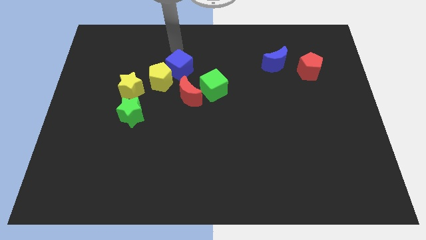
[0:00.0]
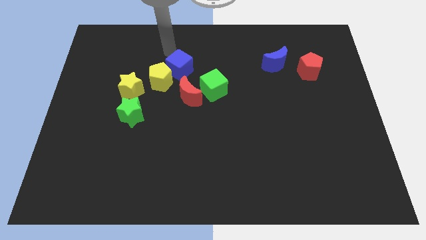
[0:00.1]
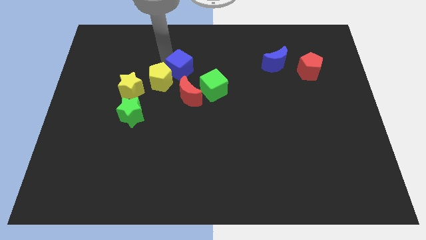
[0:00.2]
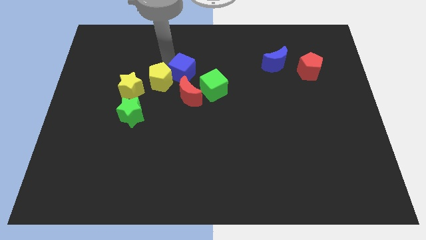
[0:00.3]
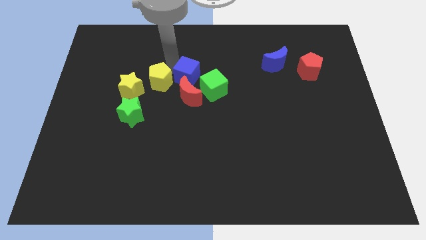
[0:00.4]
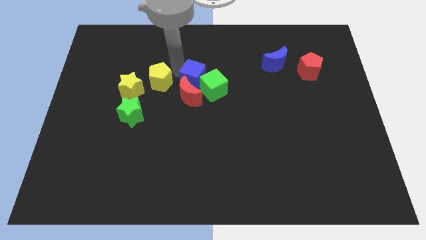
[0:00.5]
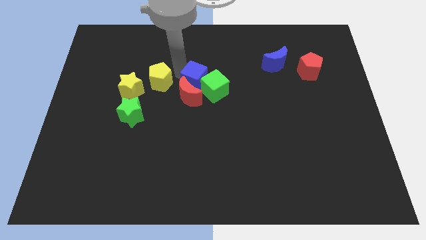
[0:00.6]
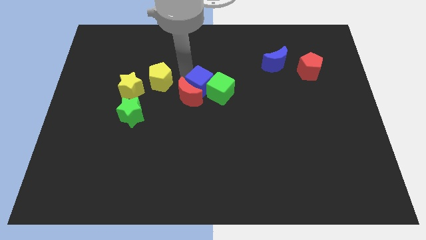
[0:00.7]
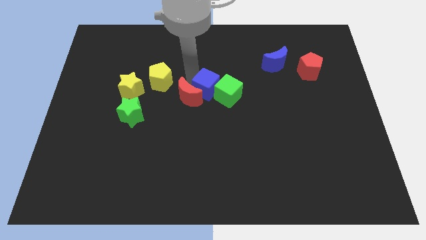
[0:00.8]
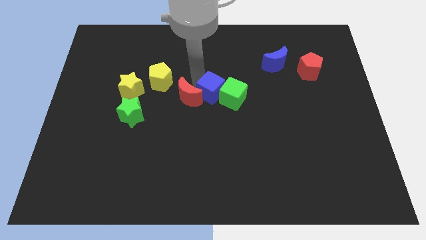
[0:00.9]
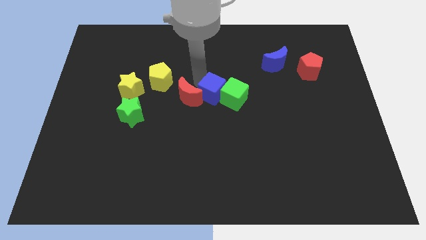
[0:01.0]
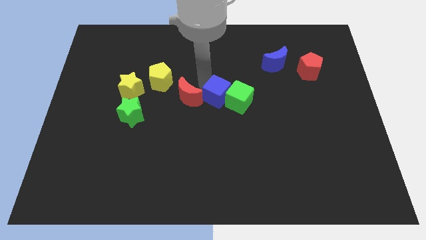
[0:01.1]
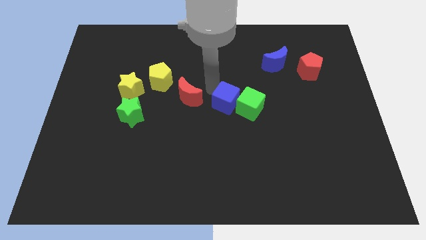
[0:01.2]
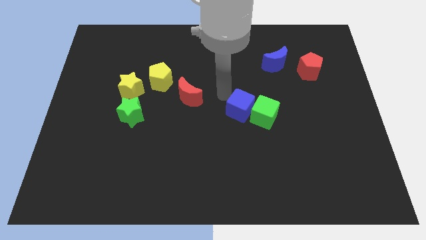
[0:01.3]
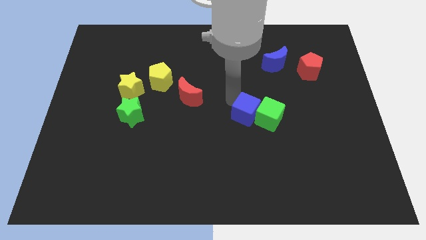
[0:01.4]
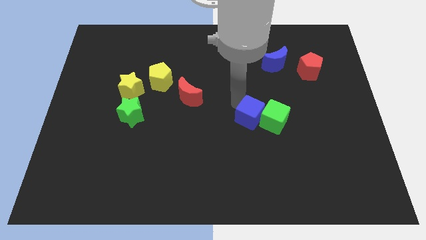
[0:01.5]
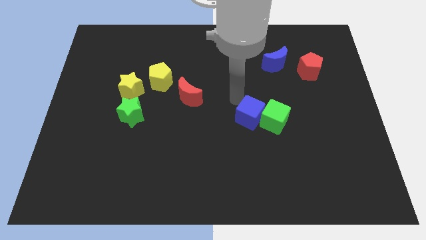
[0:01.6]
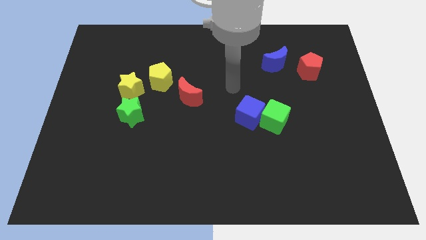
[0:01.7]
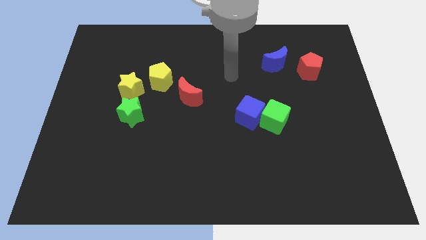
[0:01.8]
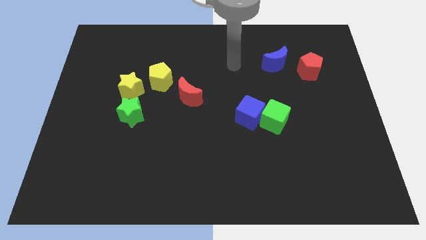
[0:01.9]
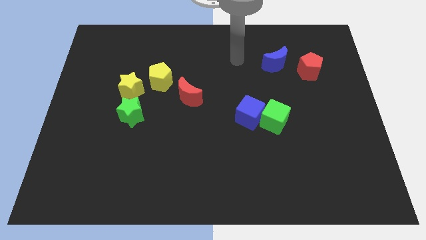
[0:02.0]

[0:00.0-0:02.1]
push the both cubes towards the bottom right

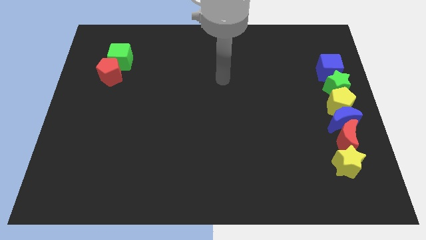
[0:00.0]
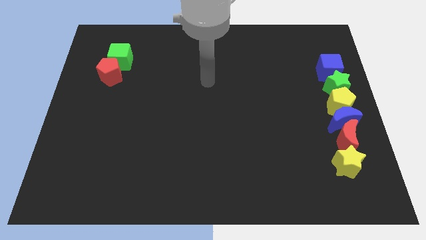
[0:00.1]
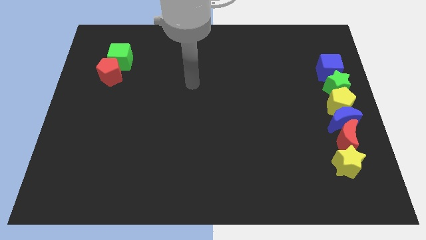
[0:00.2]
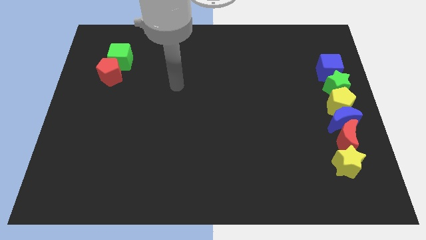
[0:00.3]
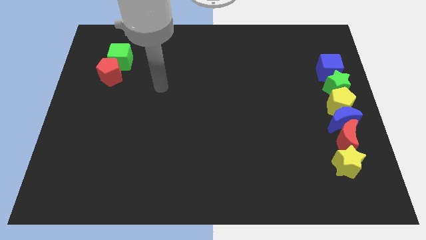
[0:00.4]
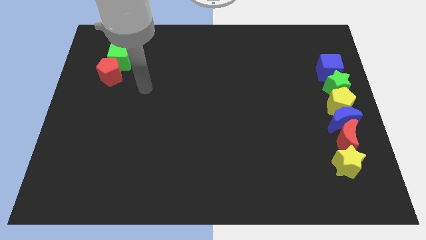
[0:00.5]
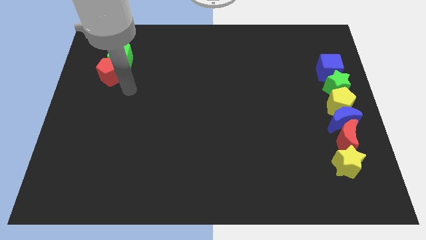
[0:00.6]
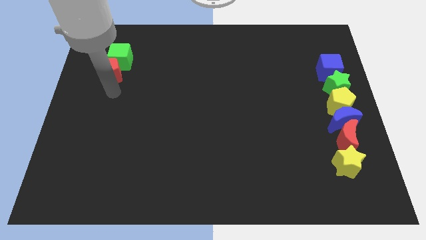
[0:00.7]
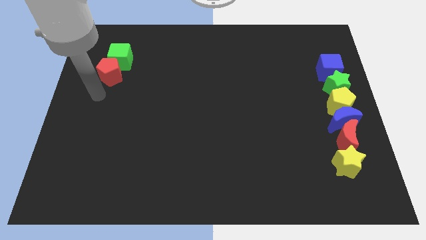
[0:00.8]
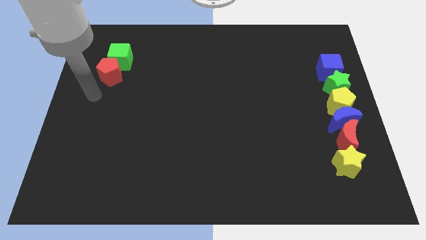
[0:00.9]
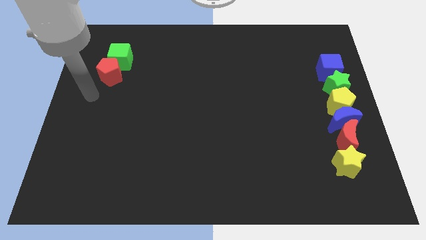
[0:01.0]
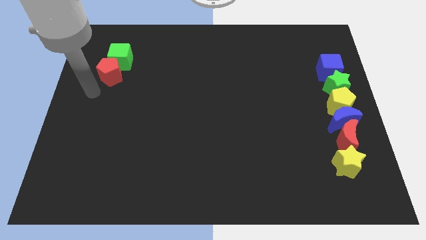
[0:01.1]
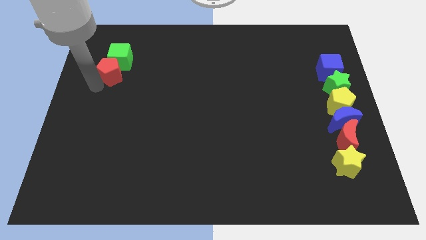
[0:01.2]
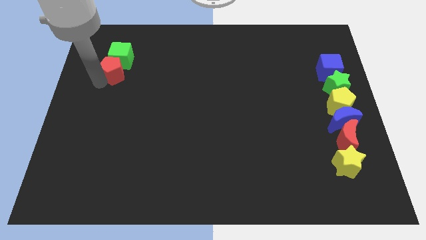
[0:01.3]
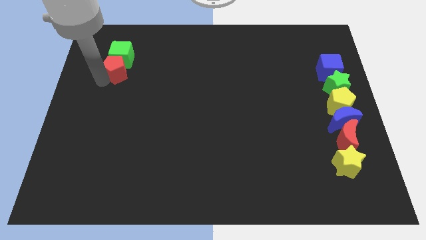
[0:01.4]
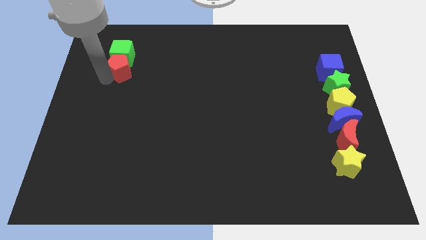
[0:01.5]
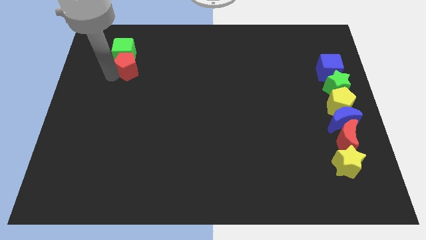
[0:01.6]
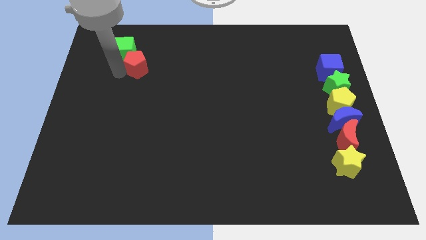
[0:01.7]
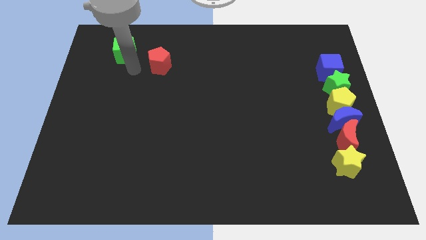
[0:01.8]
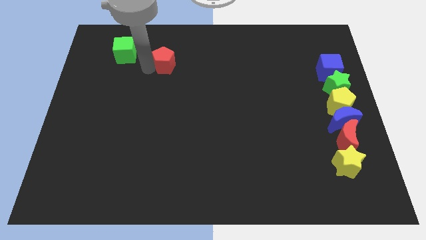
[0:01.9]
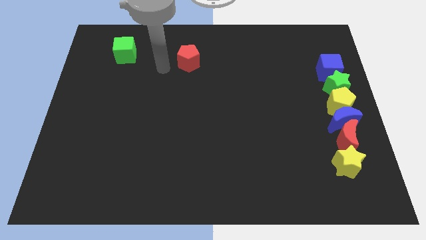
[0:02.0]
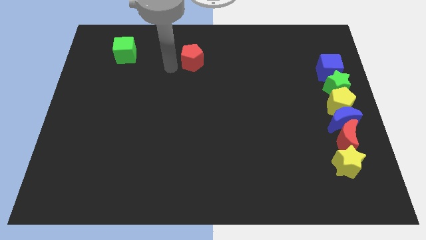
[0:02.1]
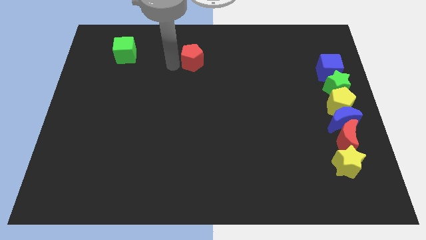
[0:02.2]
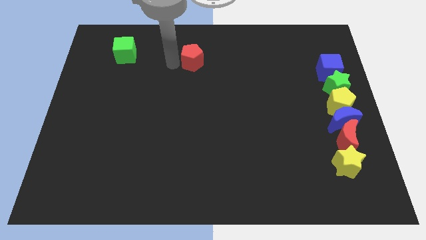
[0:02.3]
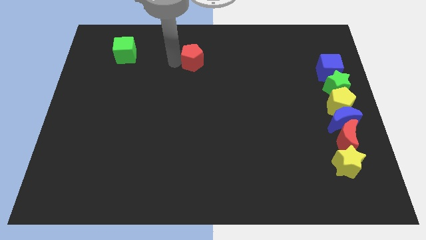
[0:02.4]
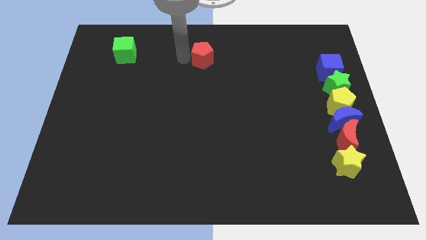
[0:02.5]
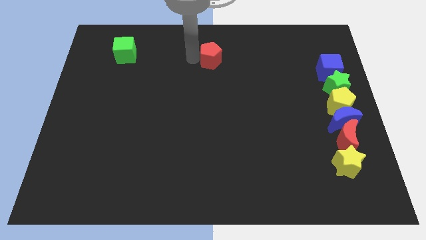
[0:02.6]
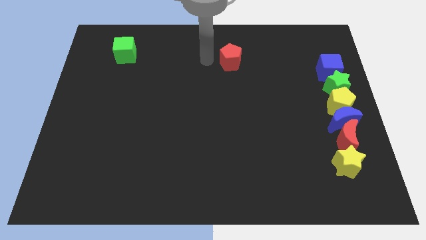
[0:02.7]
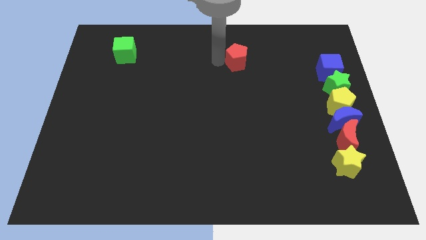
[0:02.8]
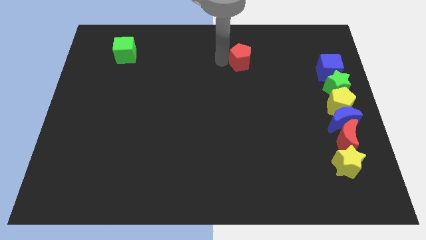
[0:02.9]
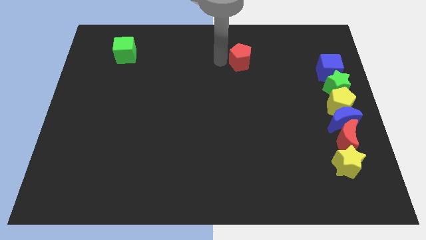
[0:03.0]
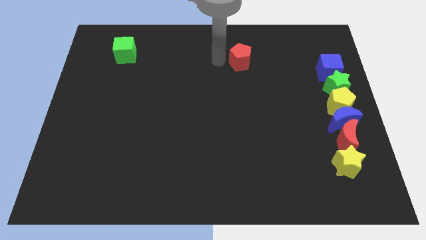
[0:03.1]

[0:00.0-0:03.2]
separate the red pentagon from the green cube

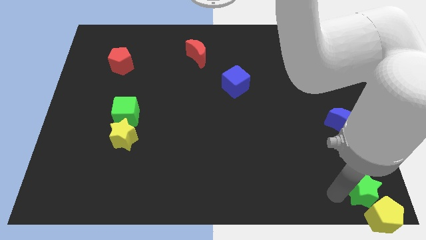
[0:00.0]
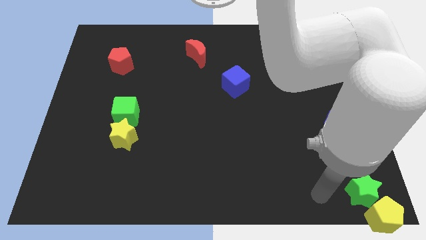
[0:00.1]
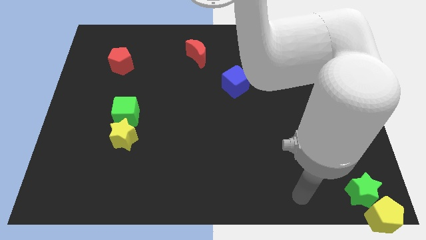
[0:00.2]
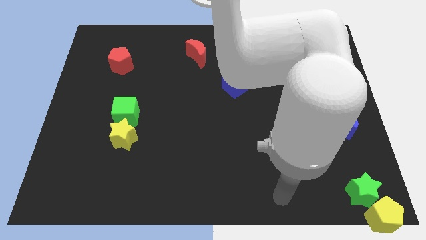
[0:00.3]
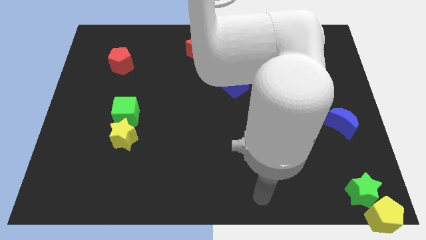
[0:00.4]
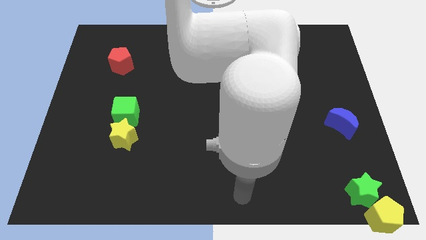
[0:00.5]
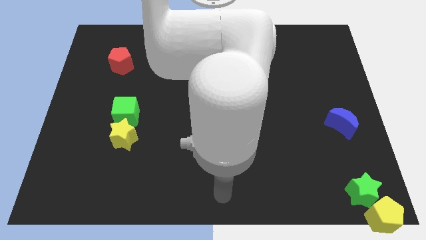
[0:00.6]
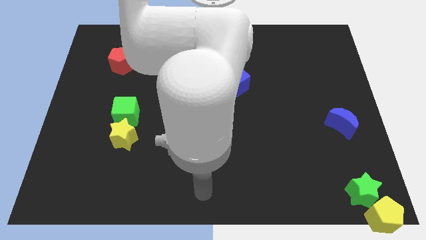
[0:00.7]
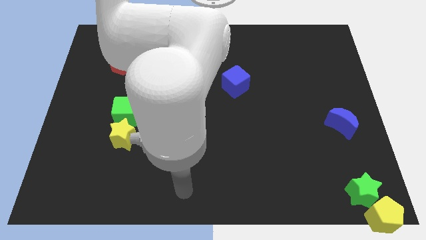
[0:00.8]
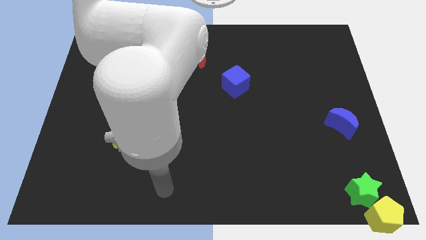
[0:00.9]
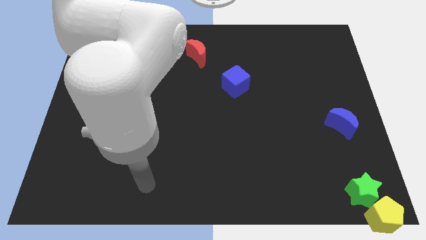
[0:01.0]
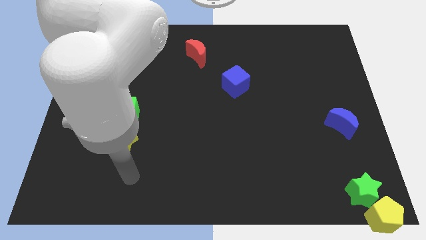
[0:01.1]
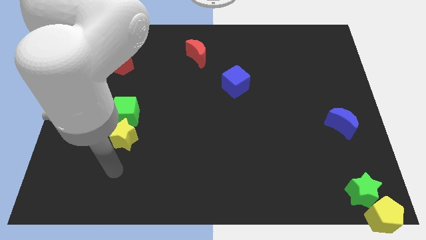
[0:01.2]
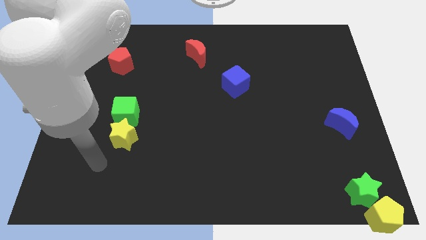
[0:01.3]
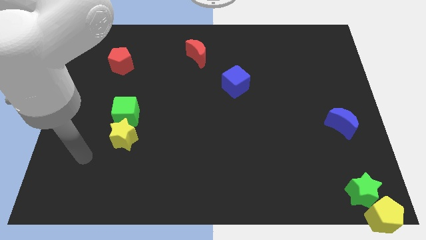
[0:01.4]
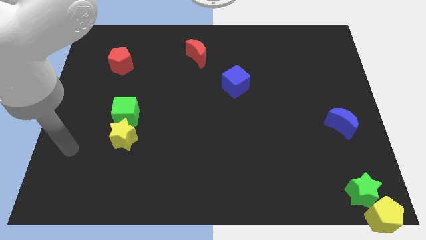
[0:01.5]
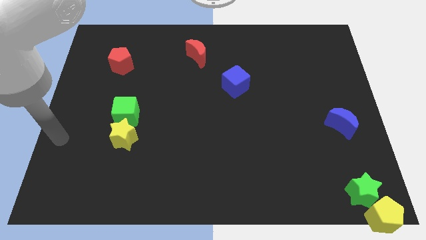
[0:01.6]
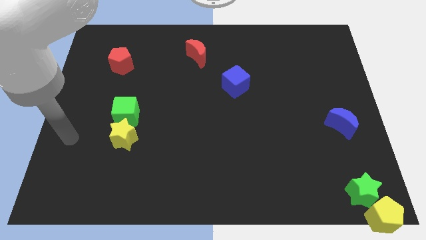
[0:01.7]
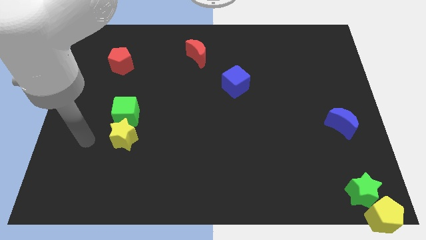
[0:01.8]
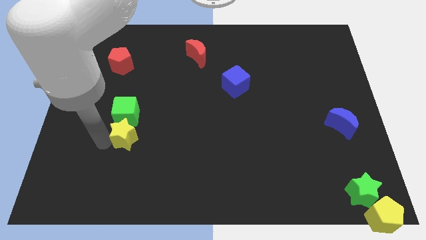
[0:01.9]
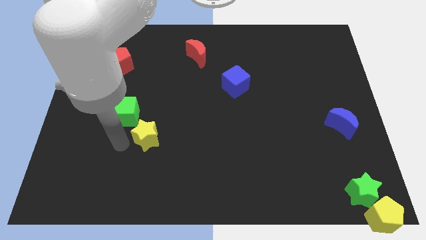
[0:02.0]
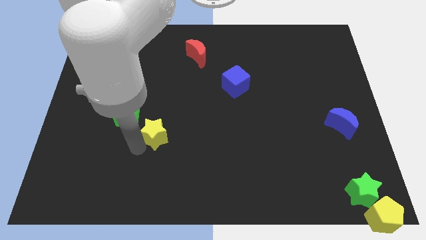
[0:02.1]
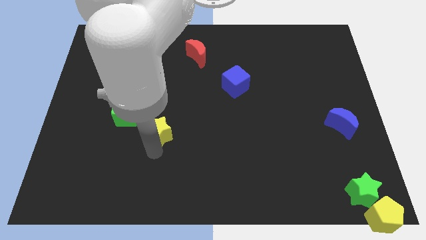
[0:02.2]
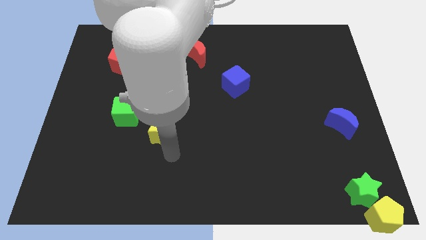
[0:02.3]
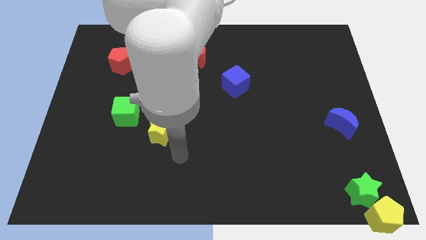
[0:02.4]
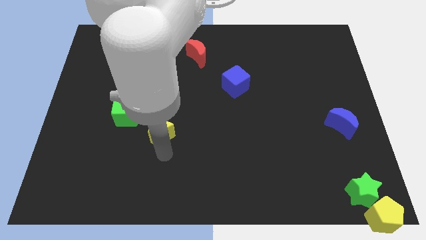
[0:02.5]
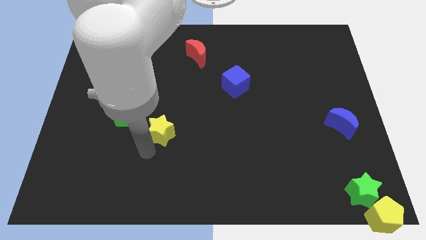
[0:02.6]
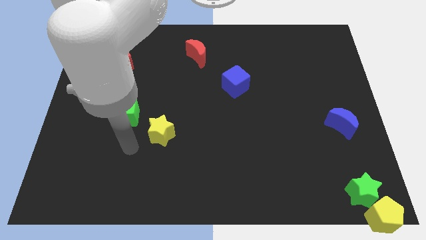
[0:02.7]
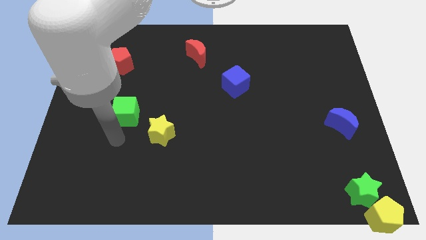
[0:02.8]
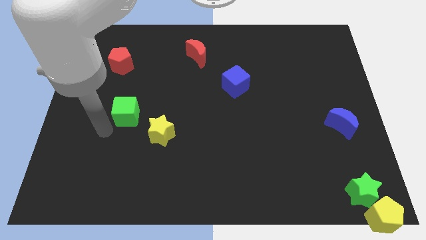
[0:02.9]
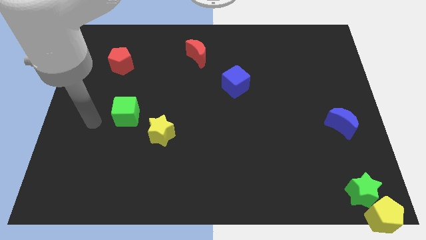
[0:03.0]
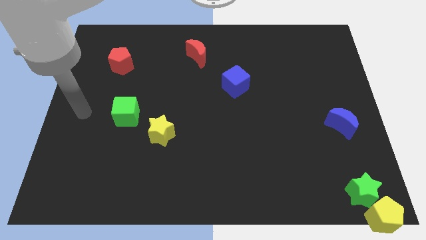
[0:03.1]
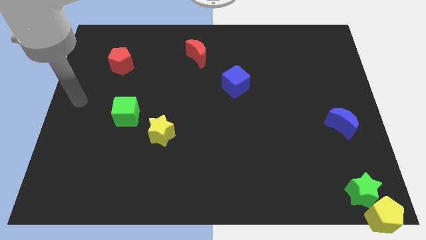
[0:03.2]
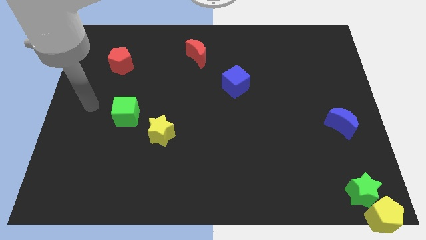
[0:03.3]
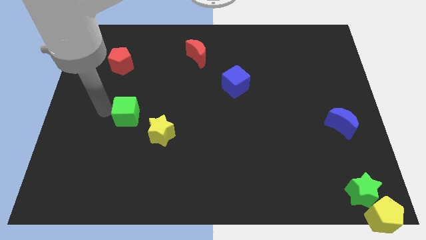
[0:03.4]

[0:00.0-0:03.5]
separate yellow star from green cube

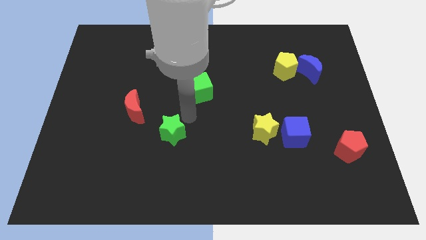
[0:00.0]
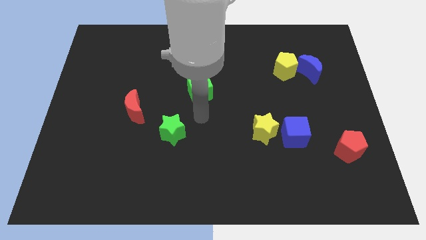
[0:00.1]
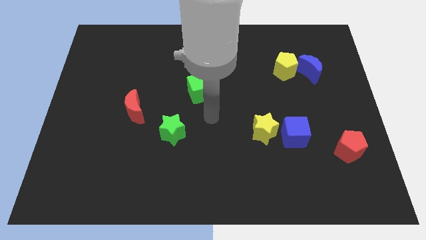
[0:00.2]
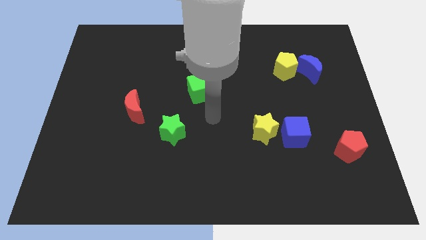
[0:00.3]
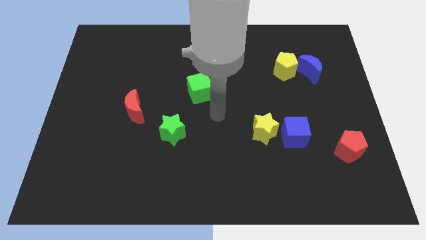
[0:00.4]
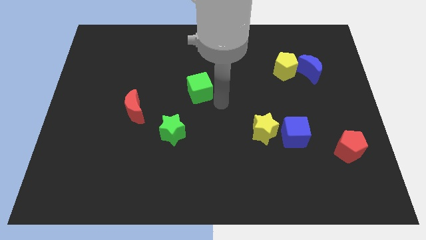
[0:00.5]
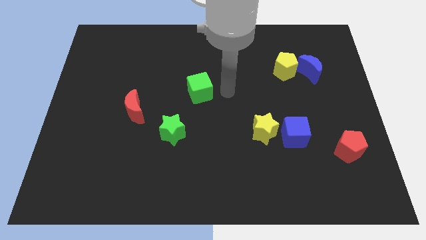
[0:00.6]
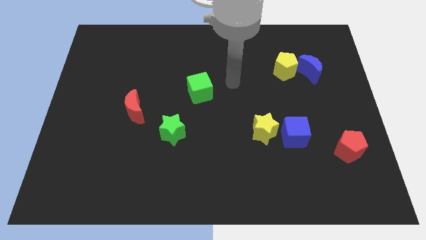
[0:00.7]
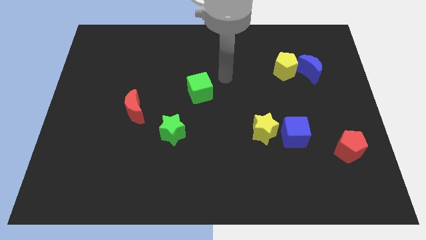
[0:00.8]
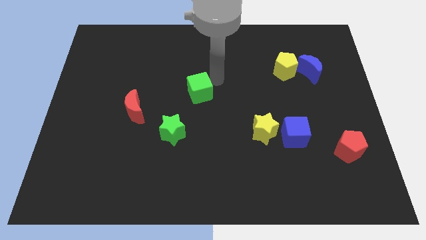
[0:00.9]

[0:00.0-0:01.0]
move your arm away from the green star
